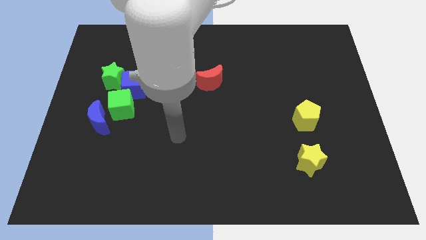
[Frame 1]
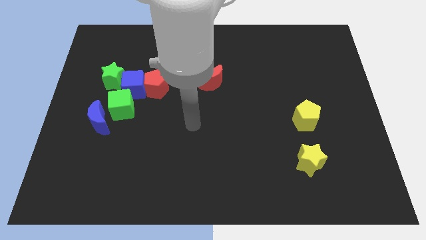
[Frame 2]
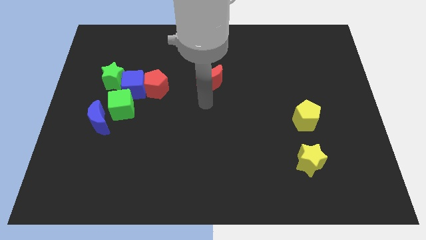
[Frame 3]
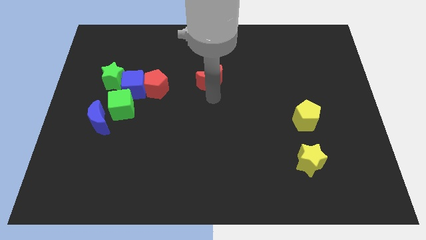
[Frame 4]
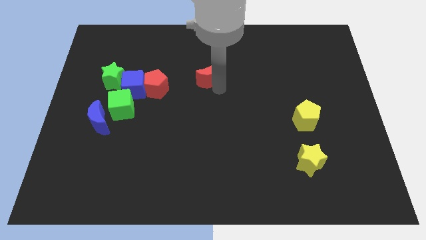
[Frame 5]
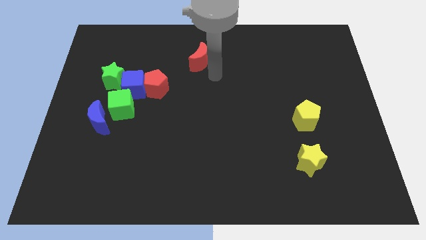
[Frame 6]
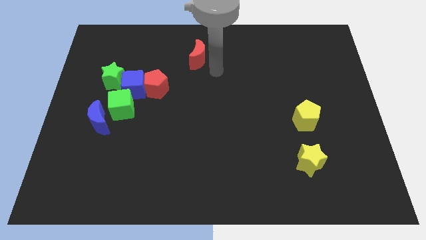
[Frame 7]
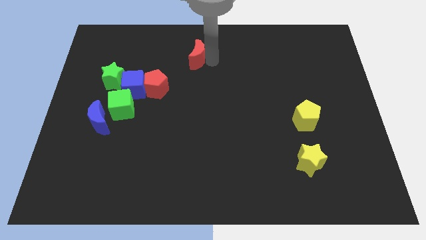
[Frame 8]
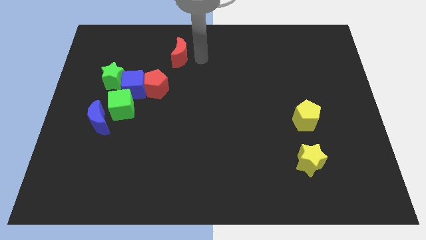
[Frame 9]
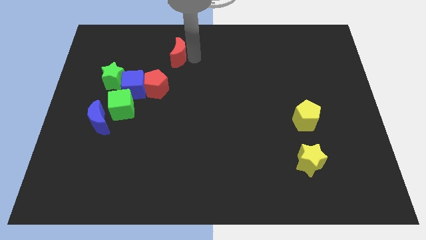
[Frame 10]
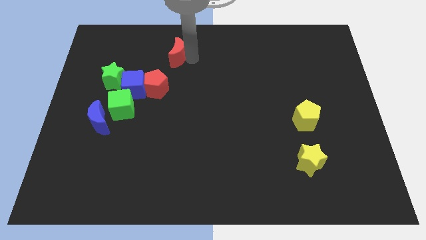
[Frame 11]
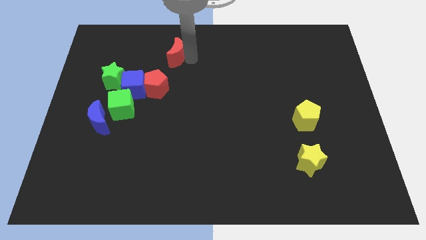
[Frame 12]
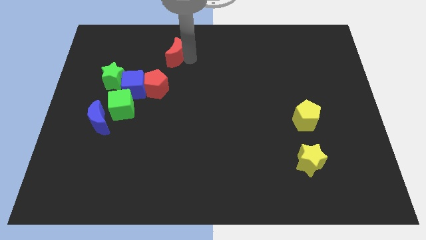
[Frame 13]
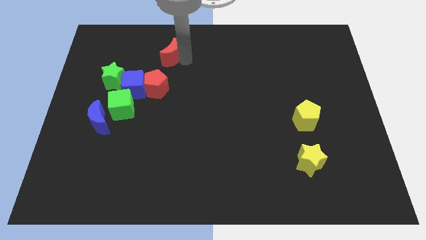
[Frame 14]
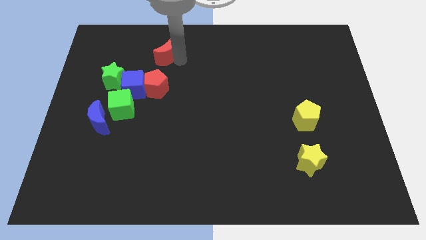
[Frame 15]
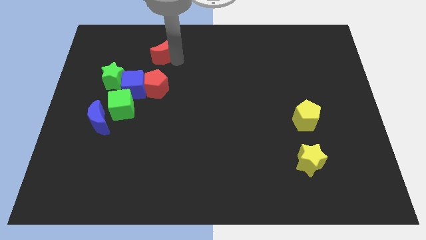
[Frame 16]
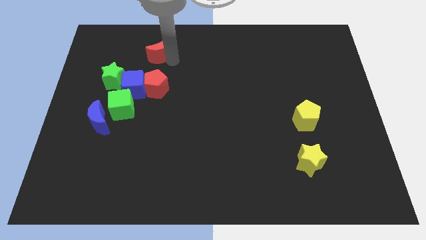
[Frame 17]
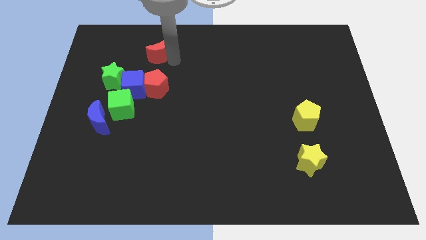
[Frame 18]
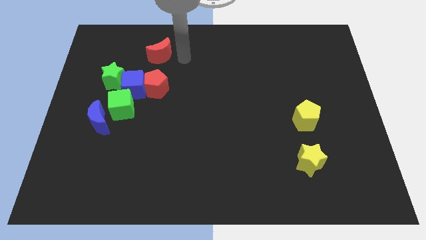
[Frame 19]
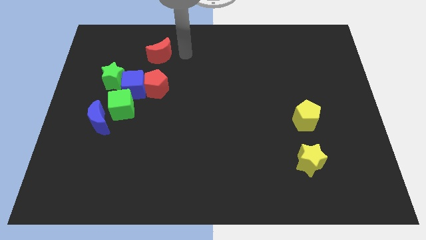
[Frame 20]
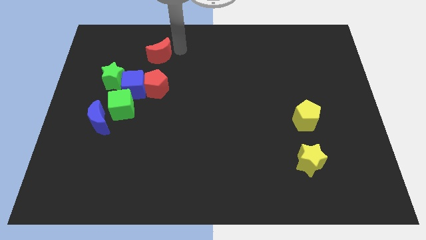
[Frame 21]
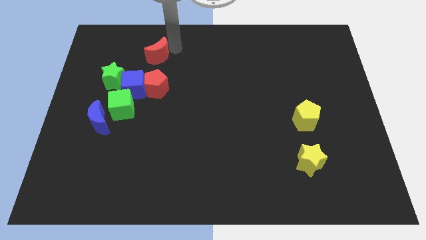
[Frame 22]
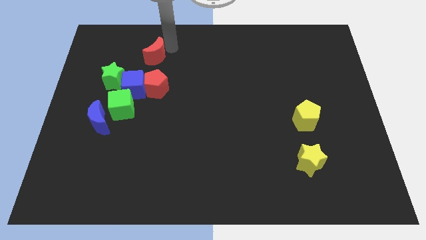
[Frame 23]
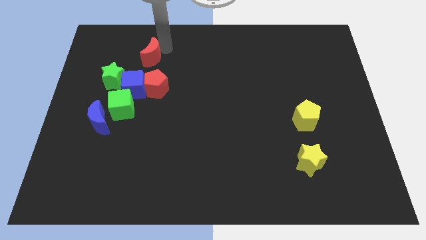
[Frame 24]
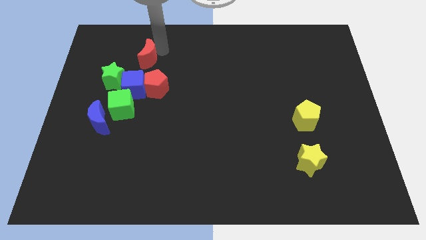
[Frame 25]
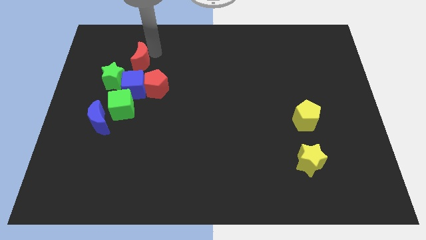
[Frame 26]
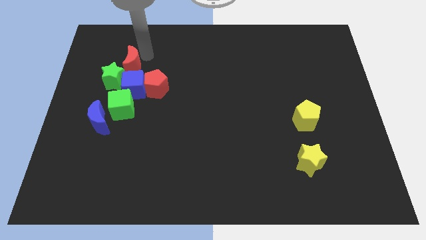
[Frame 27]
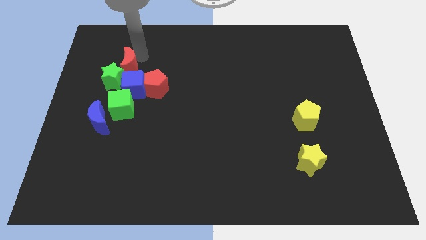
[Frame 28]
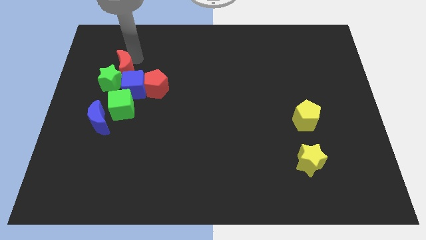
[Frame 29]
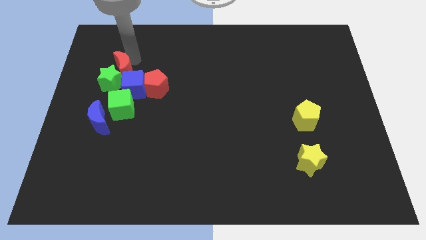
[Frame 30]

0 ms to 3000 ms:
slide the red moon close to the green star

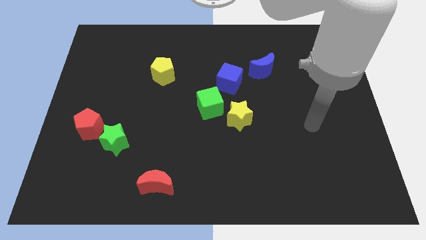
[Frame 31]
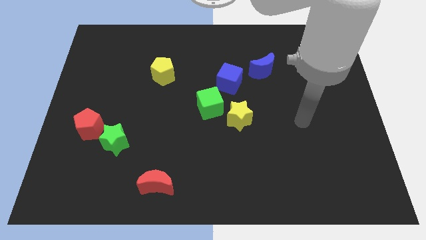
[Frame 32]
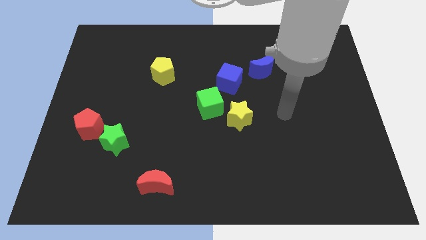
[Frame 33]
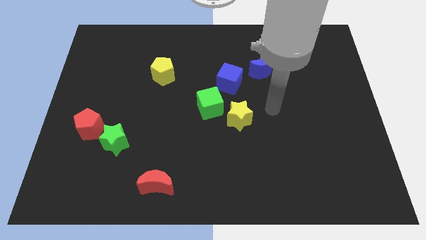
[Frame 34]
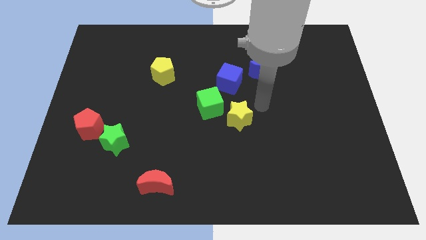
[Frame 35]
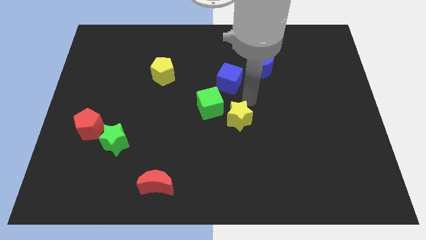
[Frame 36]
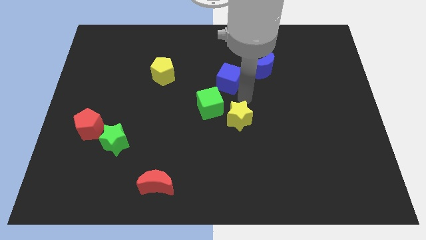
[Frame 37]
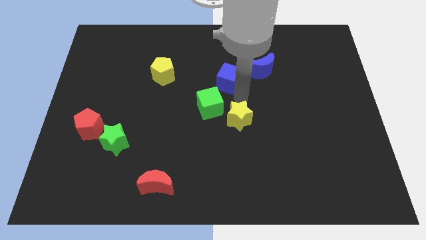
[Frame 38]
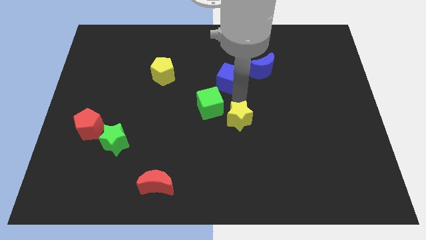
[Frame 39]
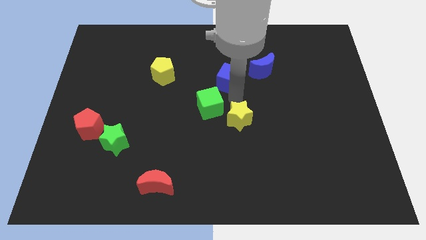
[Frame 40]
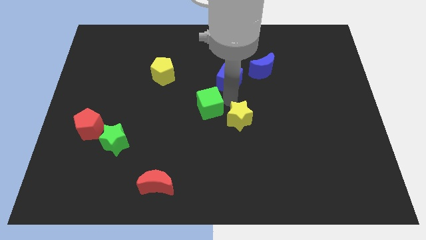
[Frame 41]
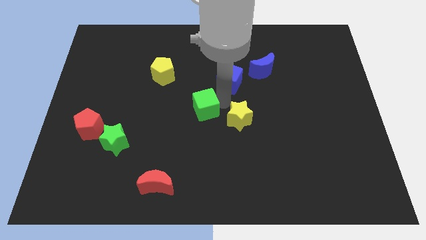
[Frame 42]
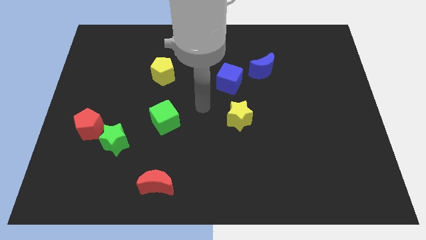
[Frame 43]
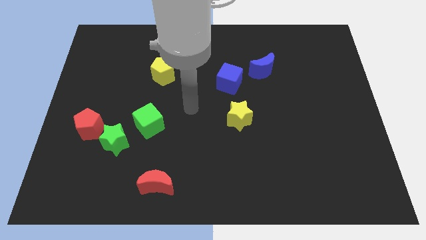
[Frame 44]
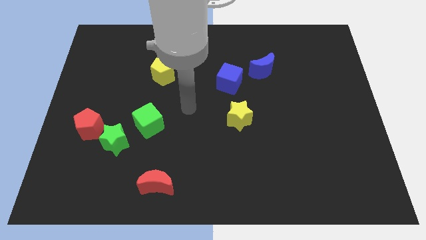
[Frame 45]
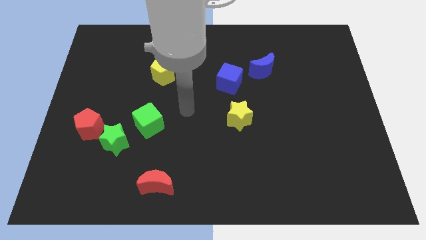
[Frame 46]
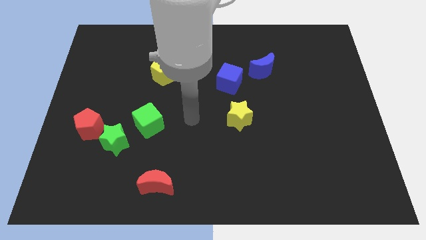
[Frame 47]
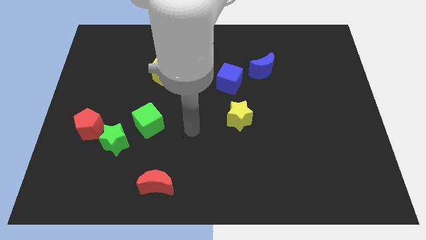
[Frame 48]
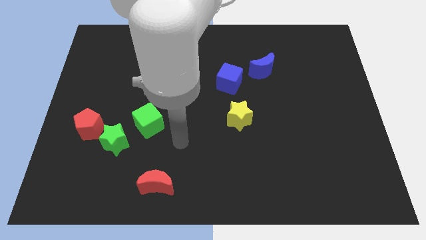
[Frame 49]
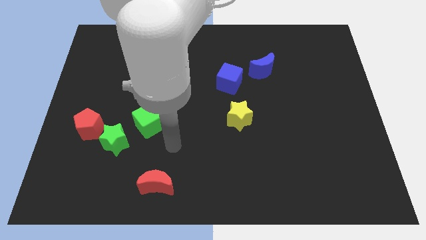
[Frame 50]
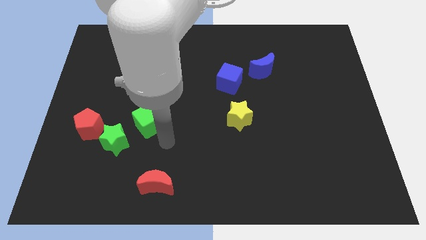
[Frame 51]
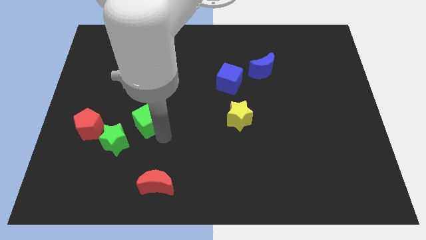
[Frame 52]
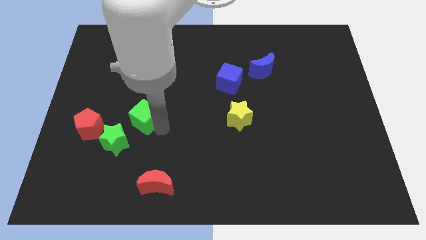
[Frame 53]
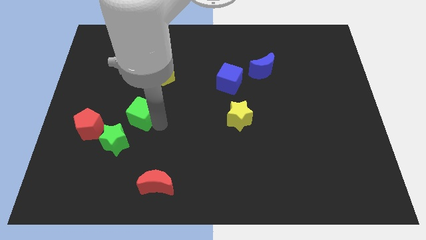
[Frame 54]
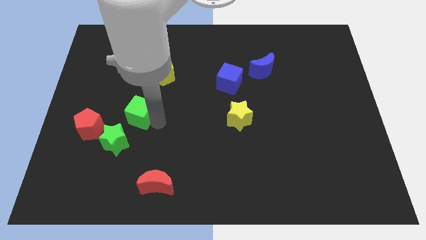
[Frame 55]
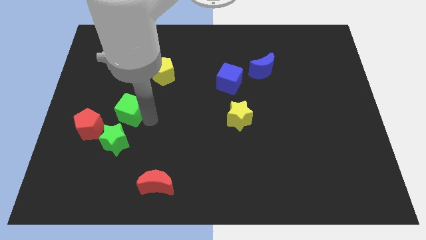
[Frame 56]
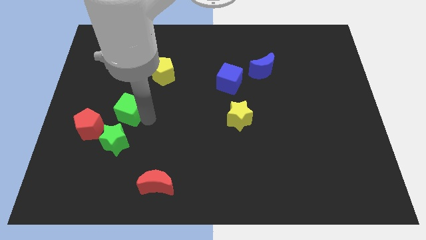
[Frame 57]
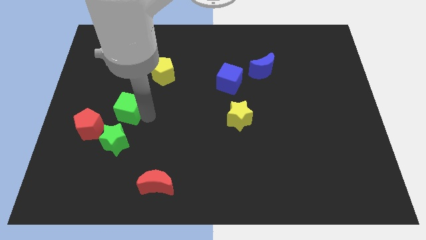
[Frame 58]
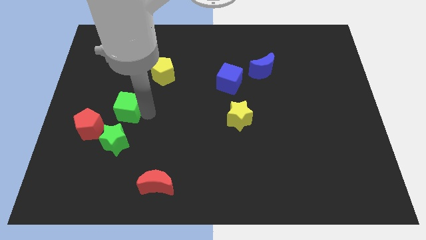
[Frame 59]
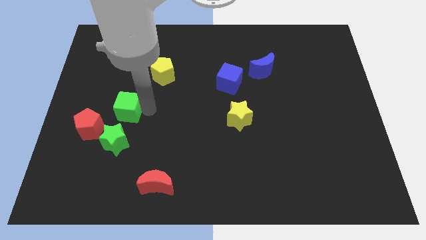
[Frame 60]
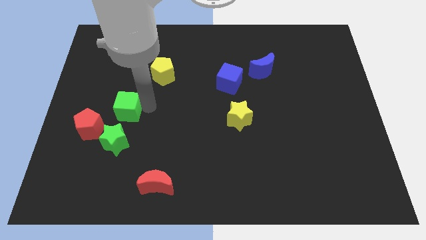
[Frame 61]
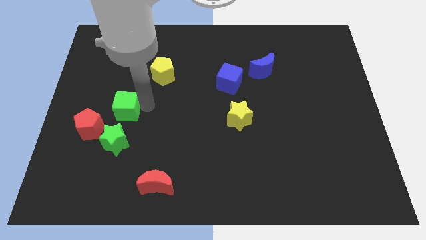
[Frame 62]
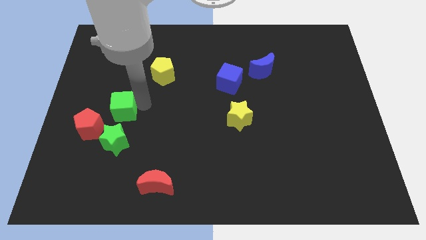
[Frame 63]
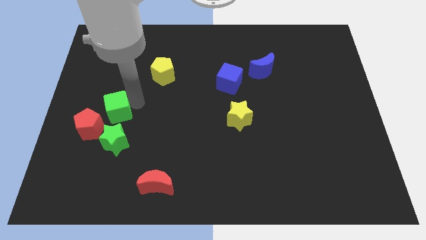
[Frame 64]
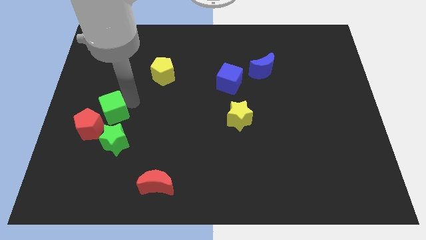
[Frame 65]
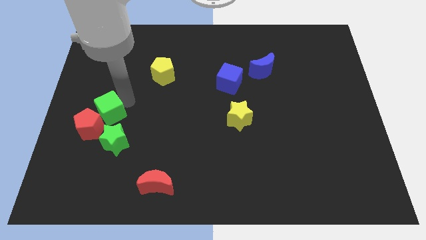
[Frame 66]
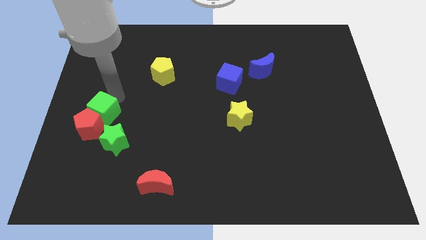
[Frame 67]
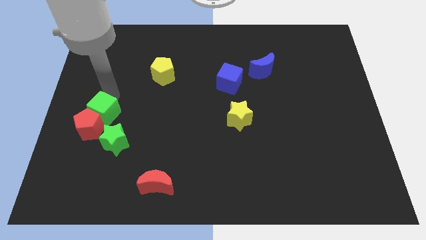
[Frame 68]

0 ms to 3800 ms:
put the green cube to the red pentagon

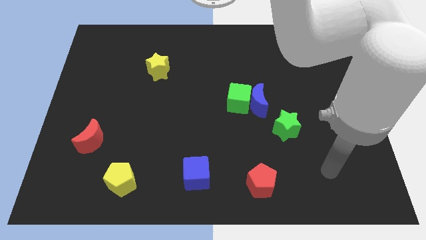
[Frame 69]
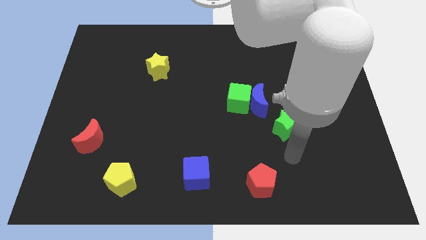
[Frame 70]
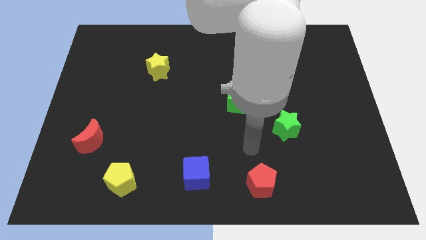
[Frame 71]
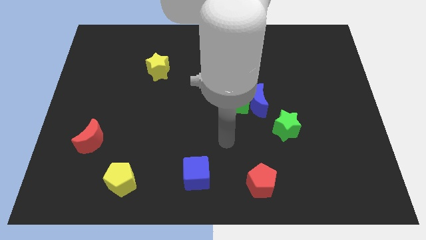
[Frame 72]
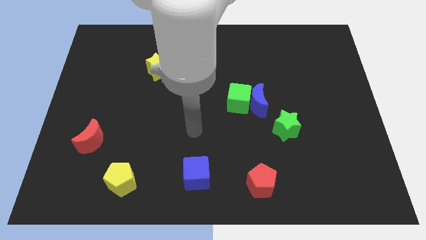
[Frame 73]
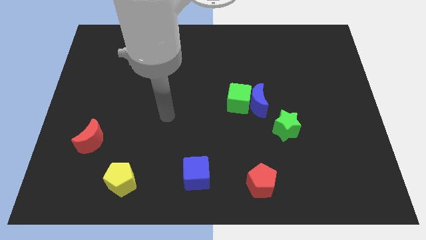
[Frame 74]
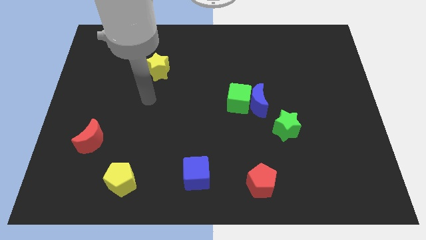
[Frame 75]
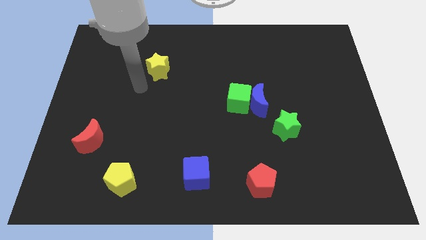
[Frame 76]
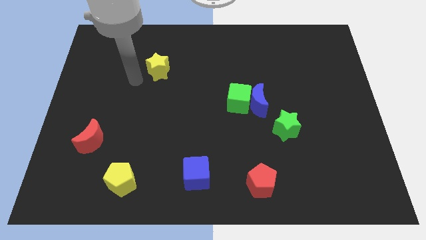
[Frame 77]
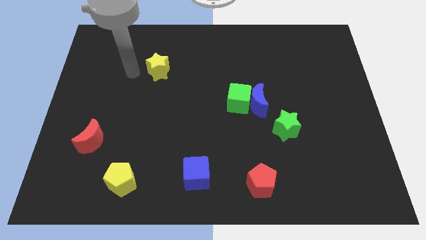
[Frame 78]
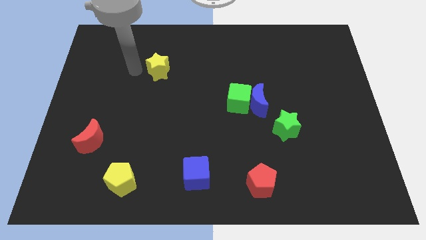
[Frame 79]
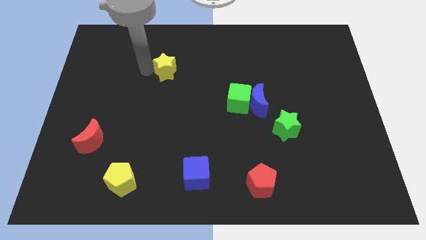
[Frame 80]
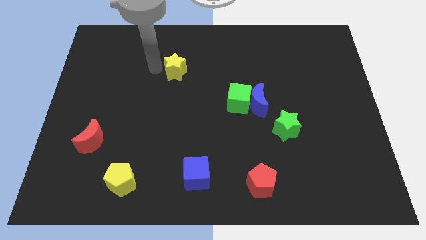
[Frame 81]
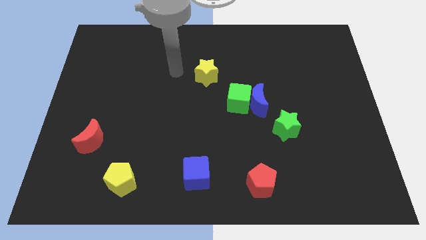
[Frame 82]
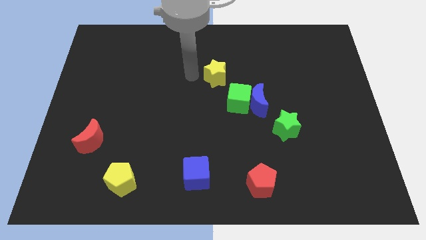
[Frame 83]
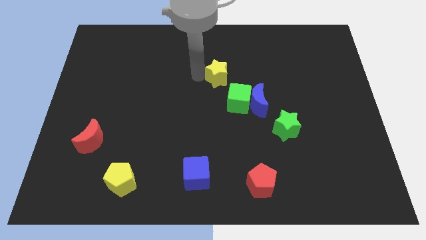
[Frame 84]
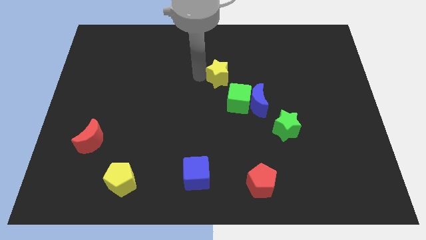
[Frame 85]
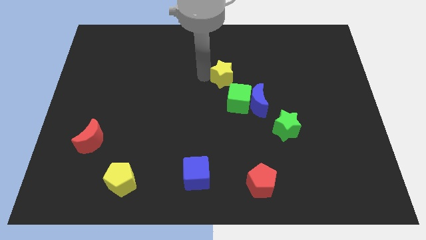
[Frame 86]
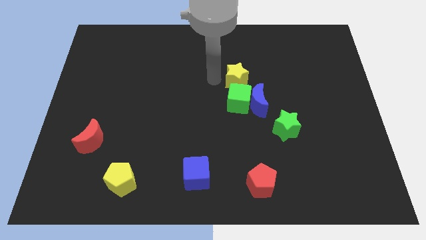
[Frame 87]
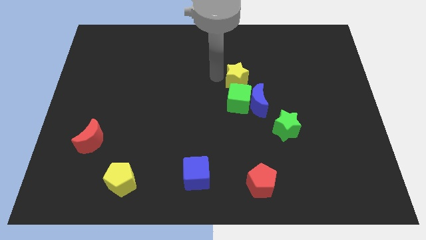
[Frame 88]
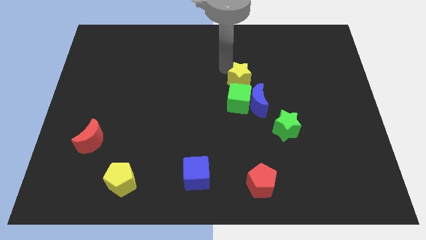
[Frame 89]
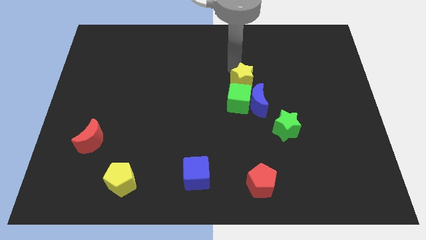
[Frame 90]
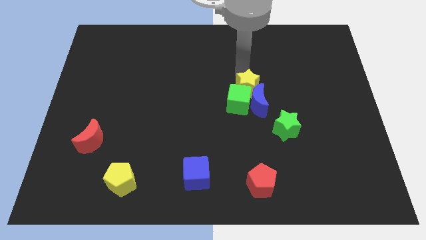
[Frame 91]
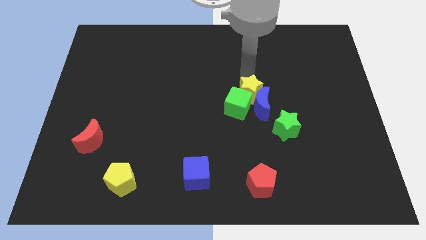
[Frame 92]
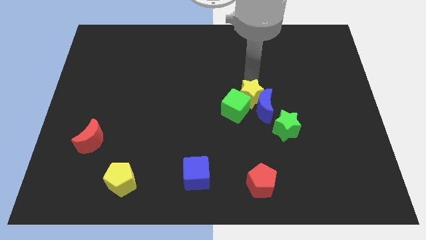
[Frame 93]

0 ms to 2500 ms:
move the yellow star to the blue moon
